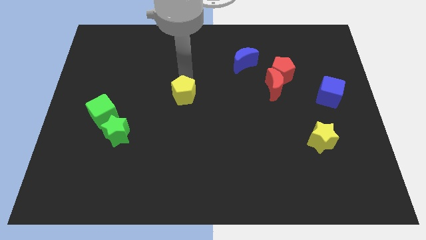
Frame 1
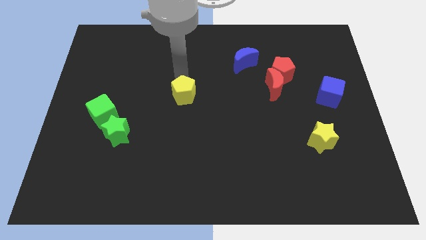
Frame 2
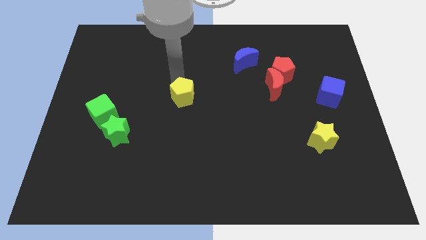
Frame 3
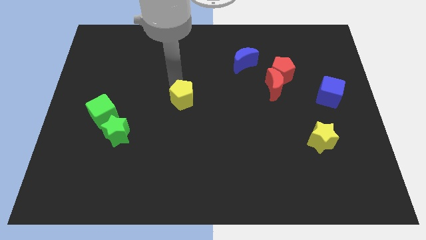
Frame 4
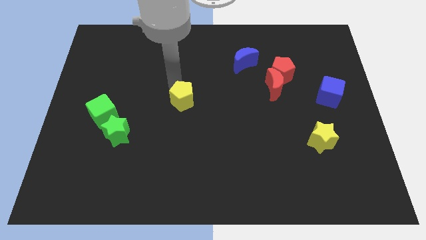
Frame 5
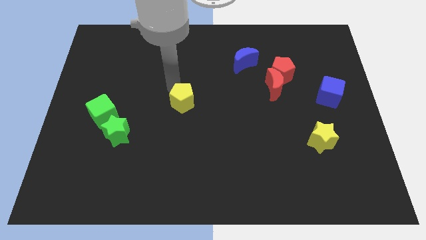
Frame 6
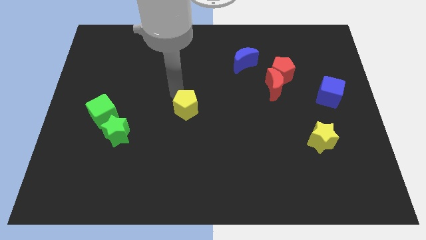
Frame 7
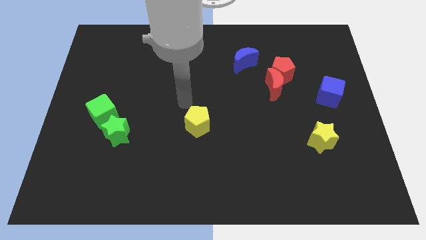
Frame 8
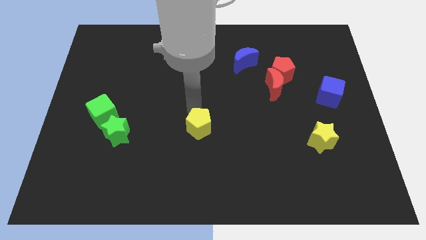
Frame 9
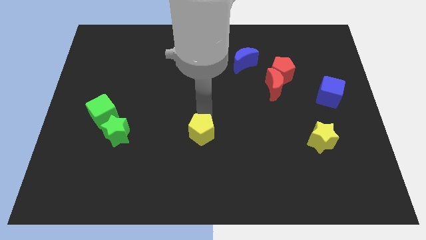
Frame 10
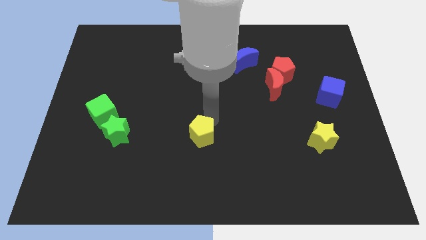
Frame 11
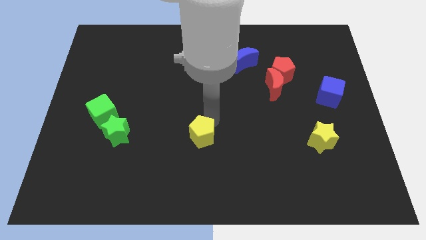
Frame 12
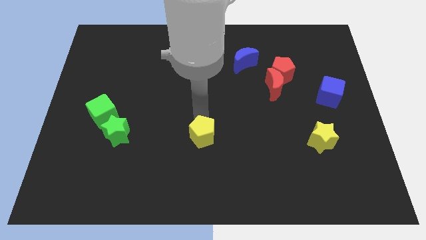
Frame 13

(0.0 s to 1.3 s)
place the yellow pentagon in between the green star and the yellow star

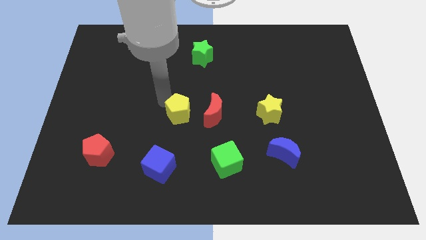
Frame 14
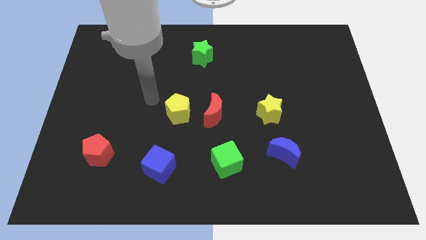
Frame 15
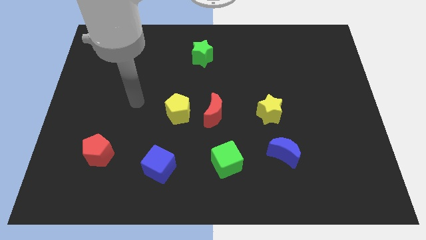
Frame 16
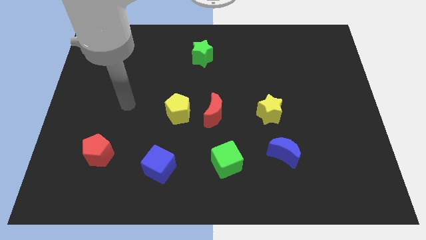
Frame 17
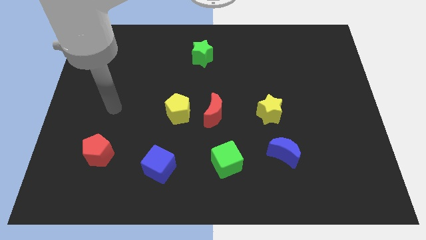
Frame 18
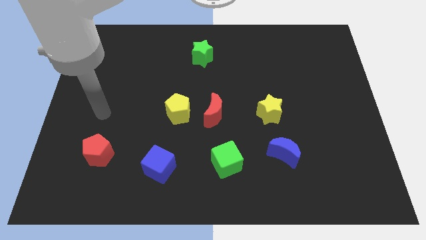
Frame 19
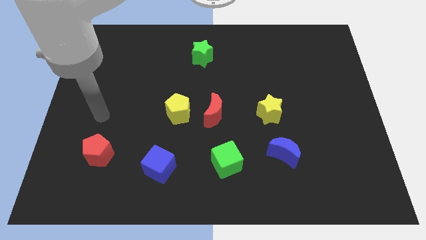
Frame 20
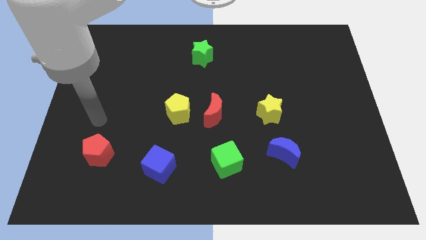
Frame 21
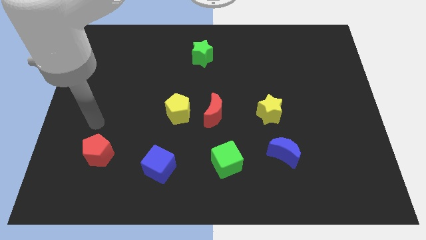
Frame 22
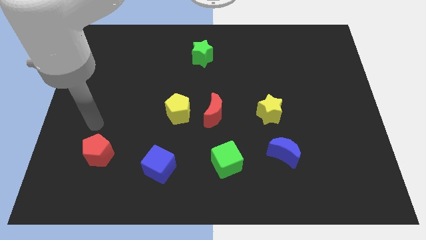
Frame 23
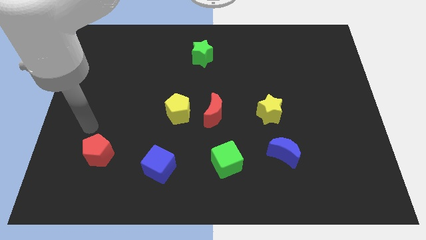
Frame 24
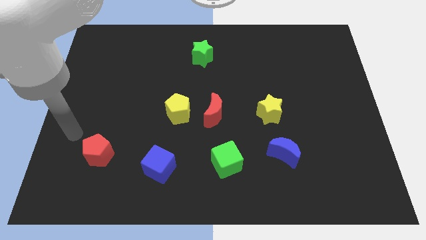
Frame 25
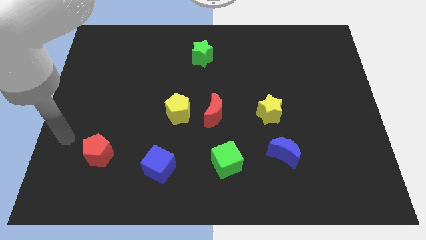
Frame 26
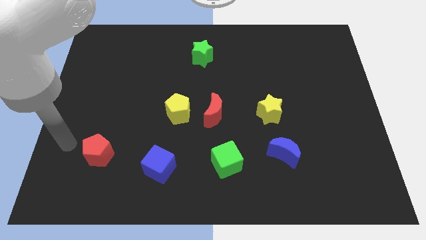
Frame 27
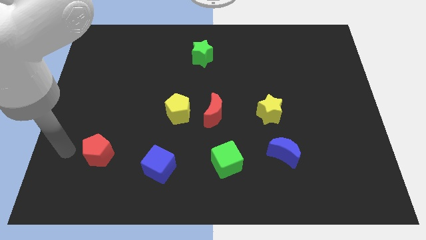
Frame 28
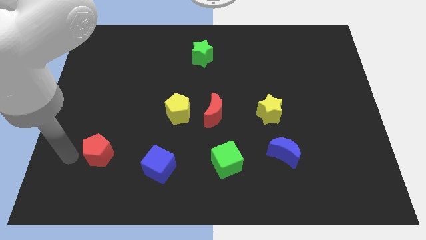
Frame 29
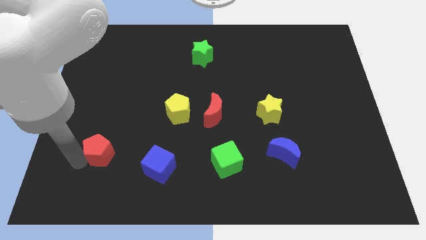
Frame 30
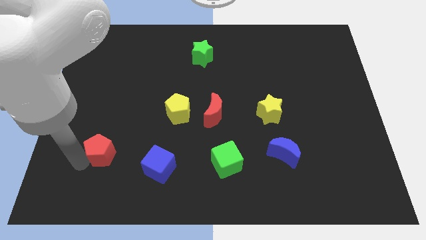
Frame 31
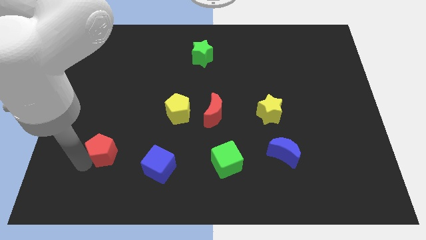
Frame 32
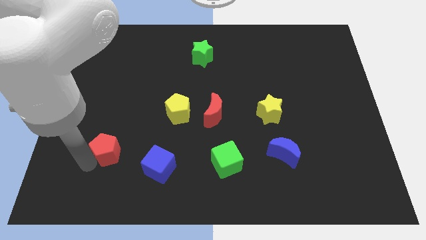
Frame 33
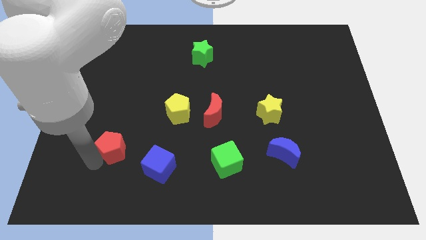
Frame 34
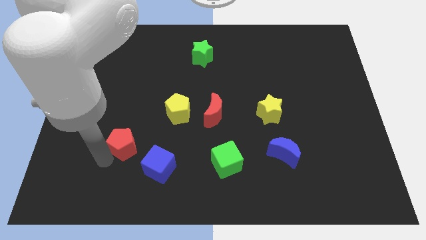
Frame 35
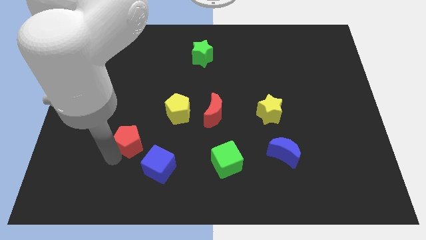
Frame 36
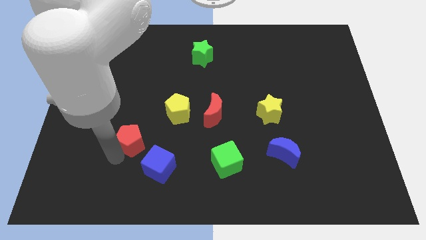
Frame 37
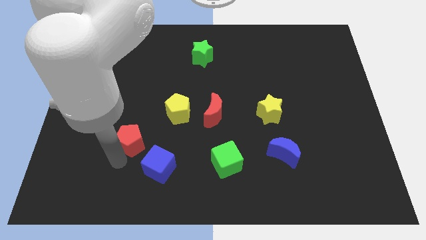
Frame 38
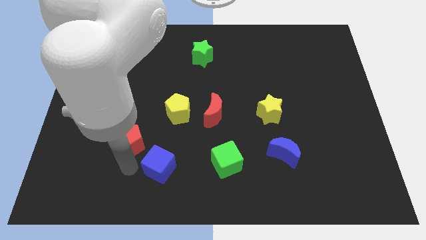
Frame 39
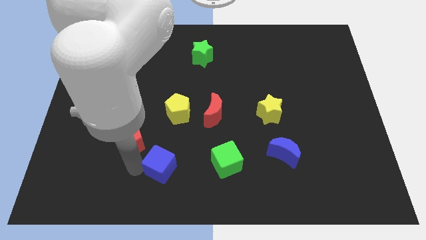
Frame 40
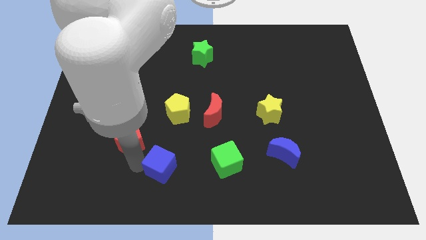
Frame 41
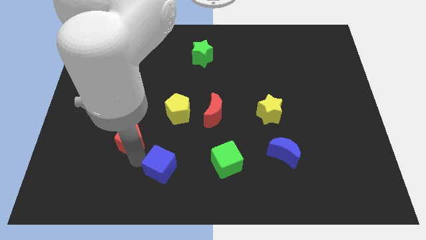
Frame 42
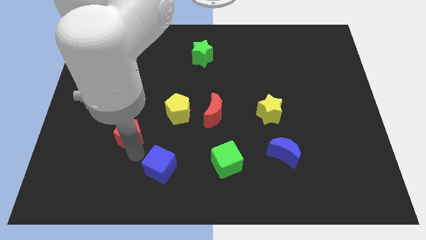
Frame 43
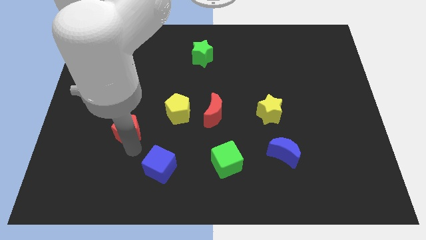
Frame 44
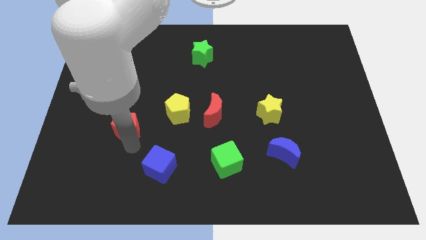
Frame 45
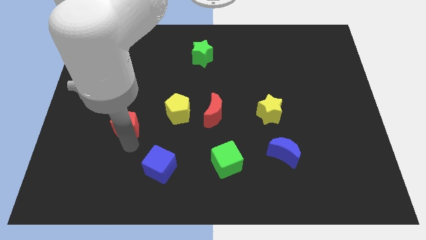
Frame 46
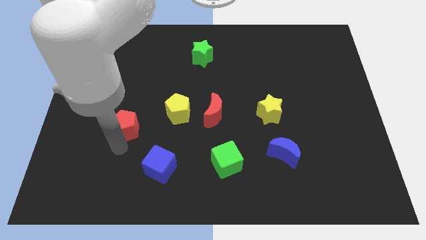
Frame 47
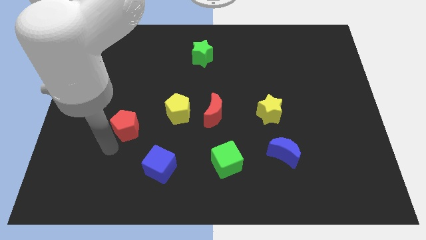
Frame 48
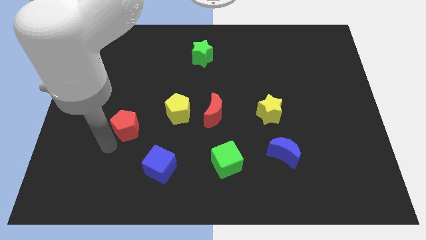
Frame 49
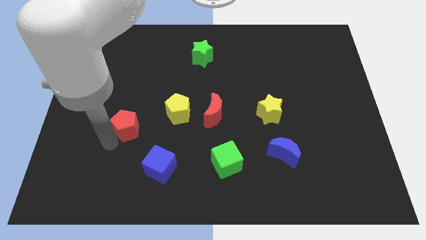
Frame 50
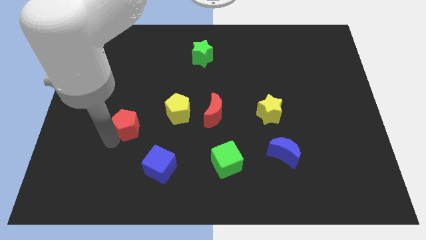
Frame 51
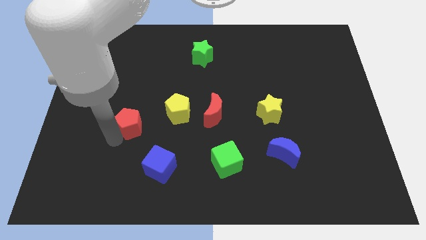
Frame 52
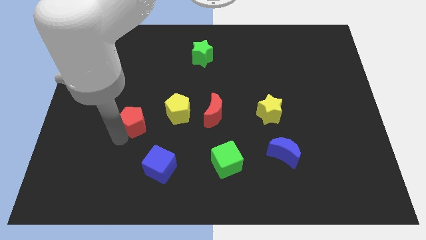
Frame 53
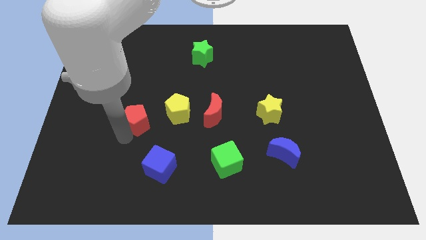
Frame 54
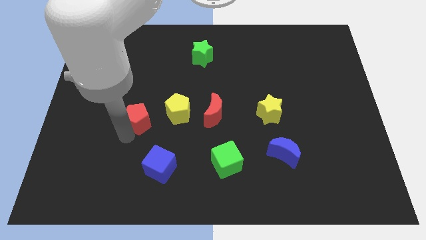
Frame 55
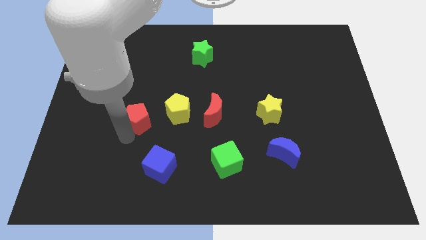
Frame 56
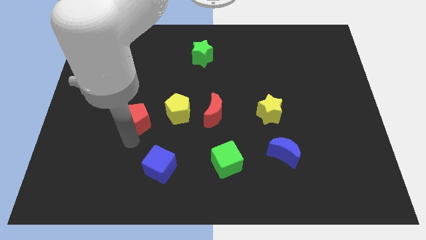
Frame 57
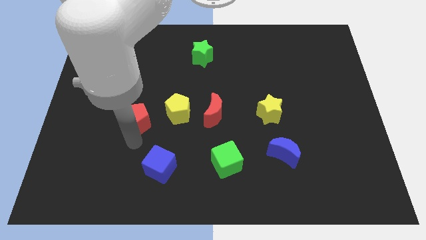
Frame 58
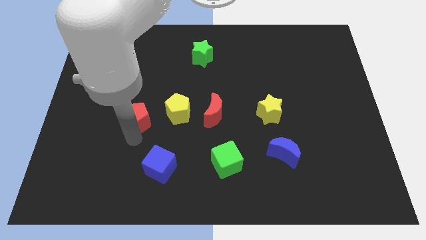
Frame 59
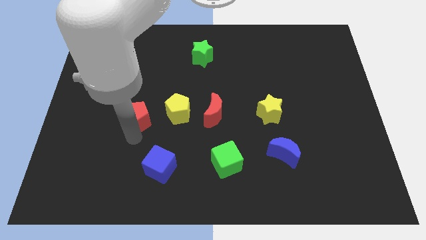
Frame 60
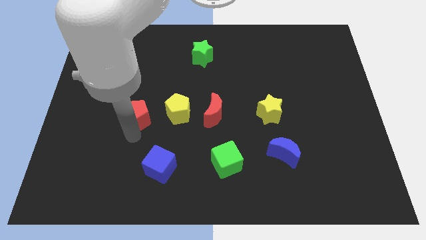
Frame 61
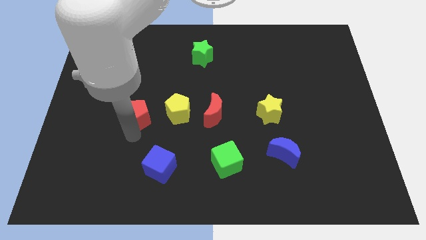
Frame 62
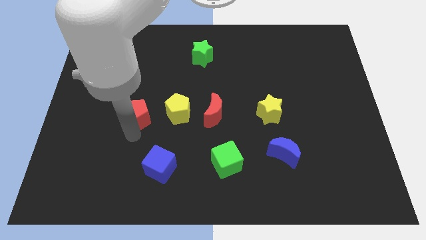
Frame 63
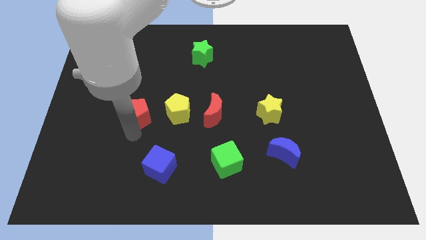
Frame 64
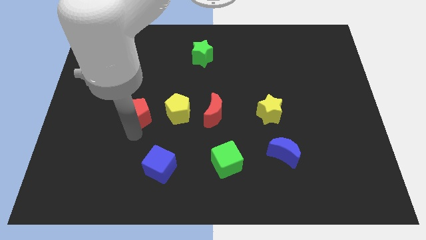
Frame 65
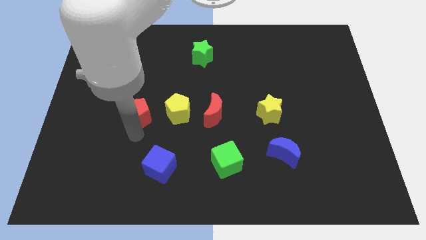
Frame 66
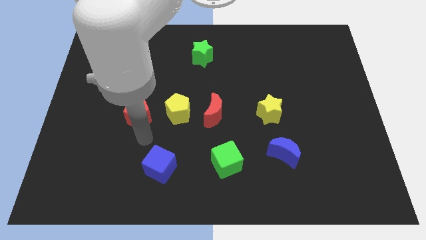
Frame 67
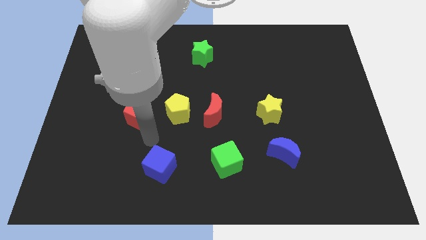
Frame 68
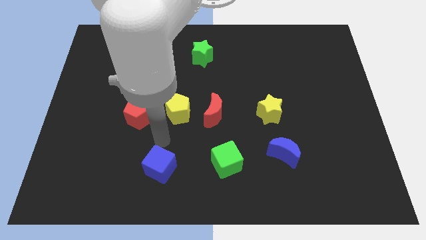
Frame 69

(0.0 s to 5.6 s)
place the red pentagon horizontally to the left side of the yellow pentagon

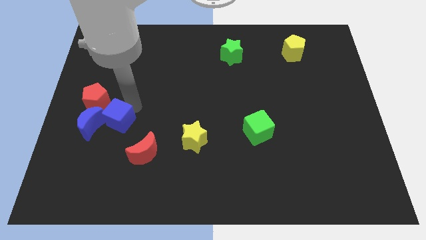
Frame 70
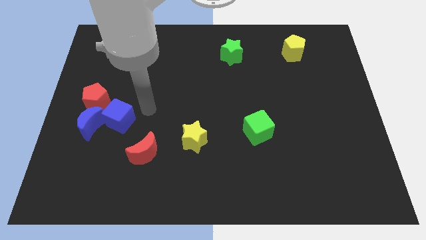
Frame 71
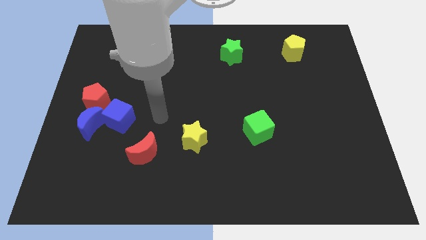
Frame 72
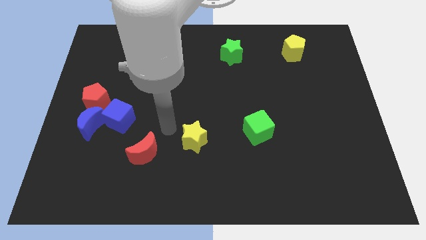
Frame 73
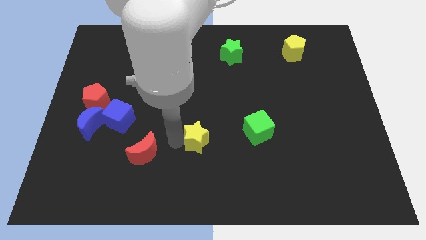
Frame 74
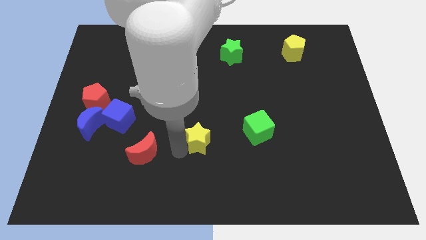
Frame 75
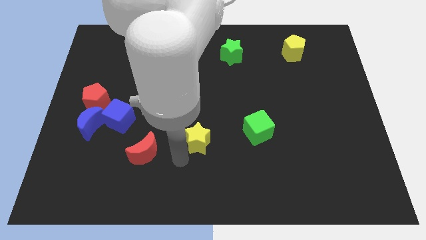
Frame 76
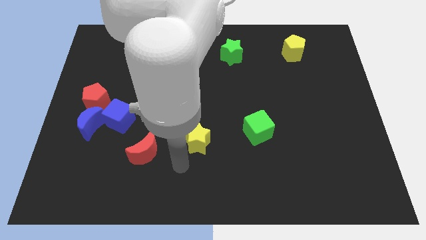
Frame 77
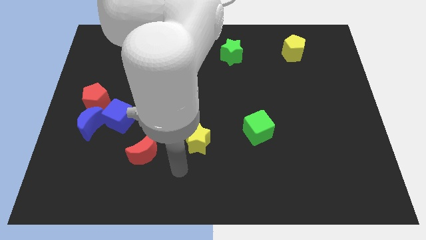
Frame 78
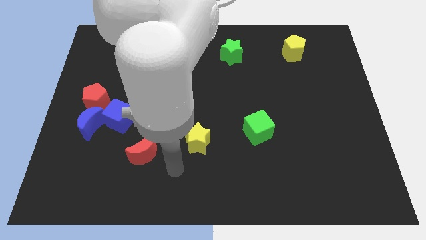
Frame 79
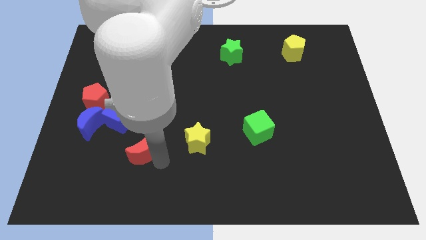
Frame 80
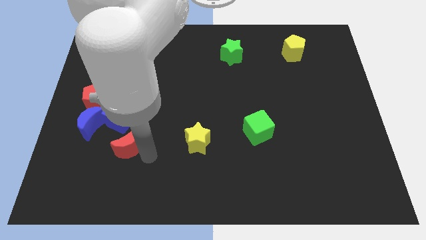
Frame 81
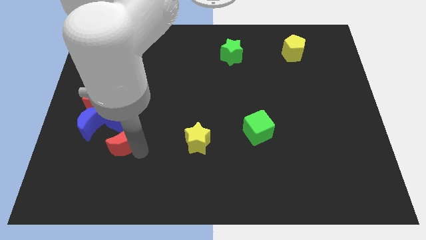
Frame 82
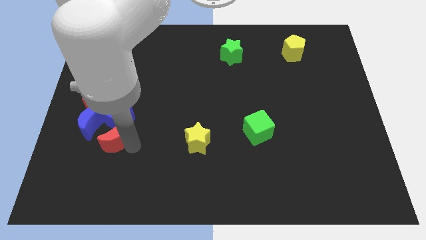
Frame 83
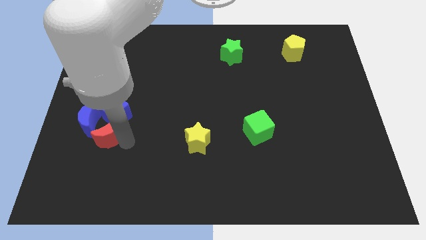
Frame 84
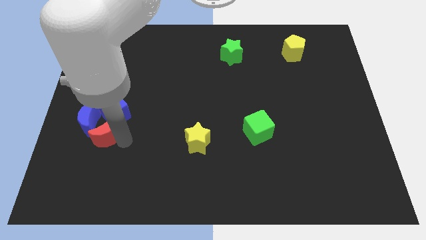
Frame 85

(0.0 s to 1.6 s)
push the red crescent into the group of blocks

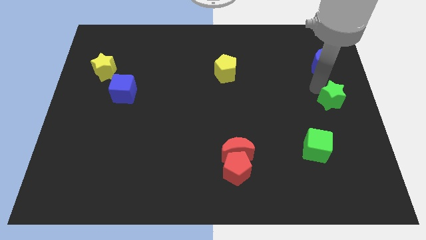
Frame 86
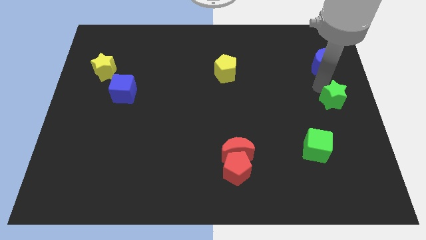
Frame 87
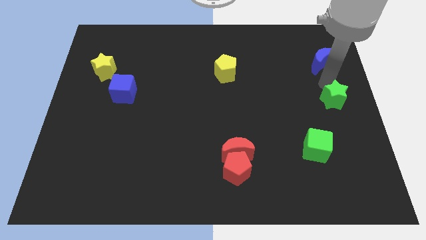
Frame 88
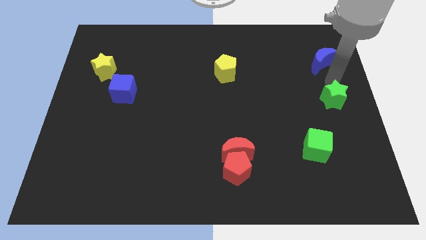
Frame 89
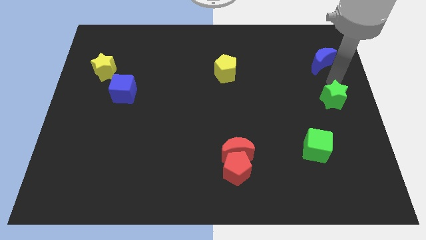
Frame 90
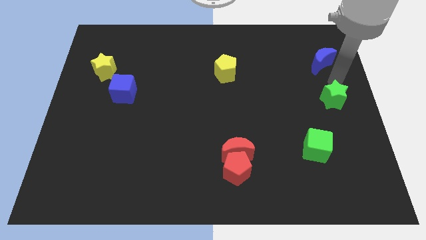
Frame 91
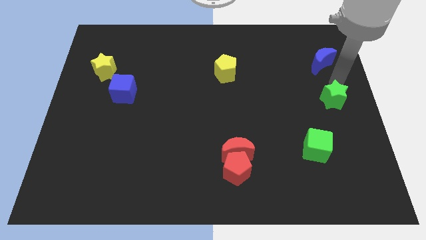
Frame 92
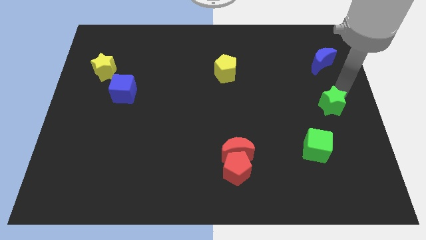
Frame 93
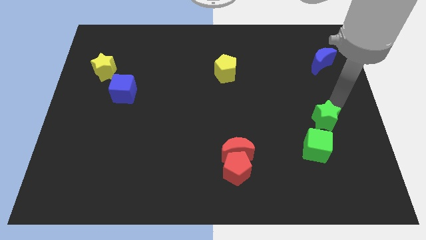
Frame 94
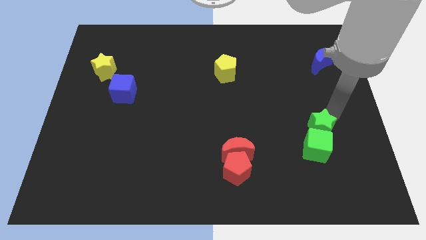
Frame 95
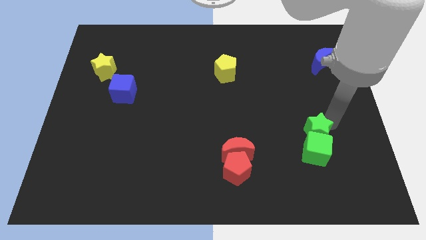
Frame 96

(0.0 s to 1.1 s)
push green star in to green cube
